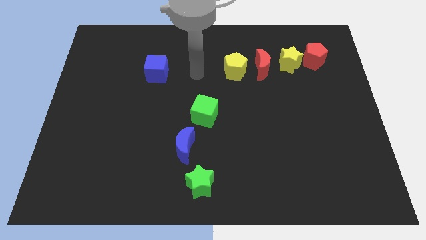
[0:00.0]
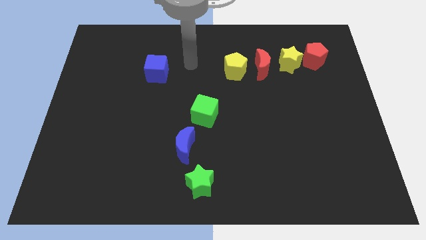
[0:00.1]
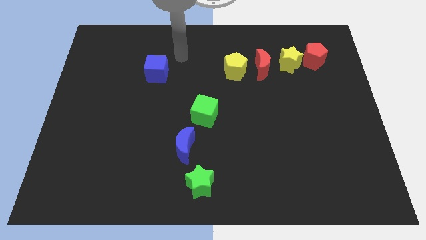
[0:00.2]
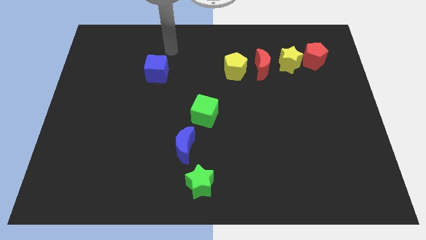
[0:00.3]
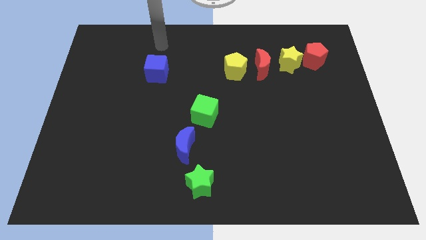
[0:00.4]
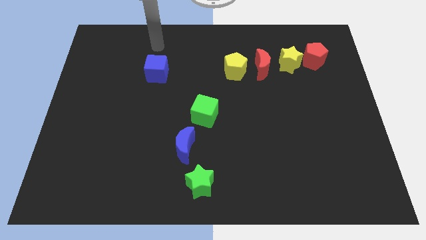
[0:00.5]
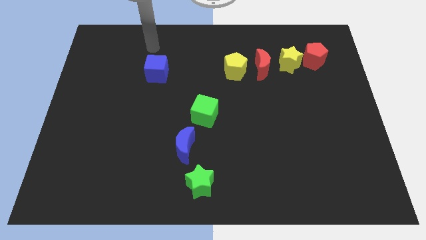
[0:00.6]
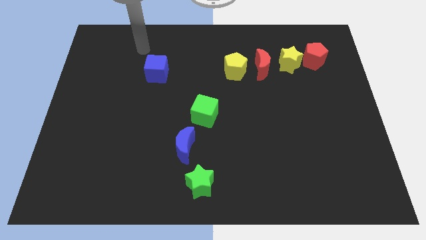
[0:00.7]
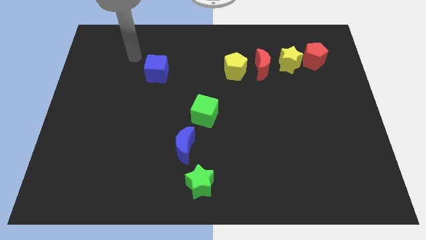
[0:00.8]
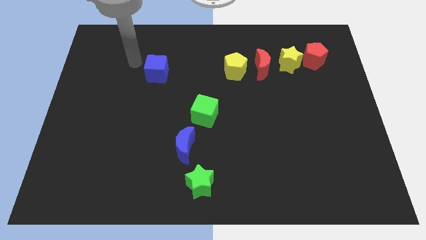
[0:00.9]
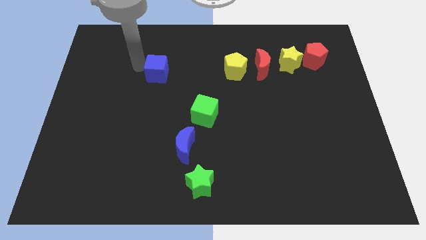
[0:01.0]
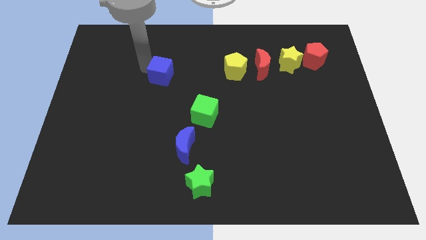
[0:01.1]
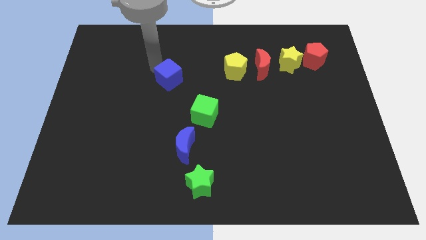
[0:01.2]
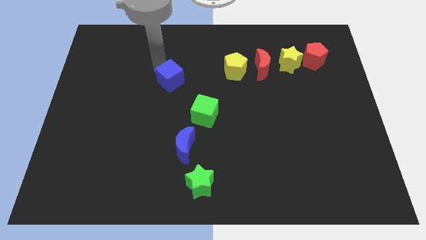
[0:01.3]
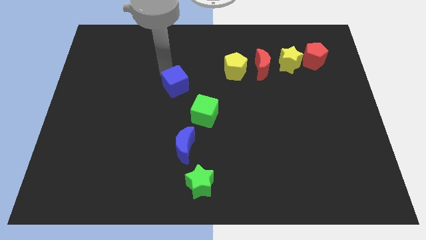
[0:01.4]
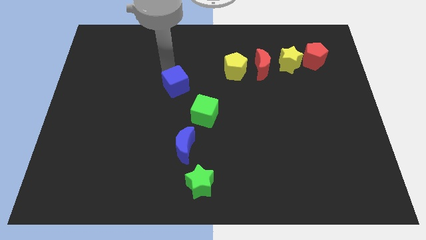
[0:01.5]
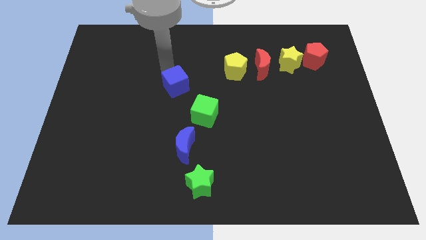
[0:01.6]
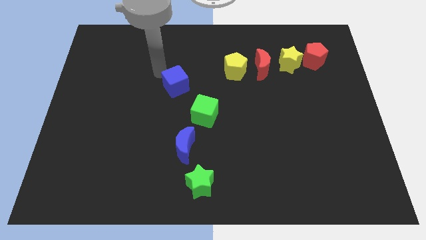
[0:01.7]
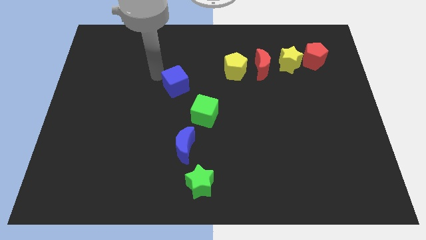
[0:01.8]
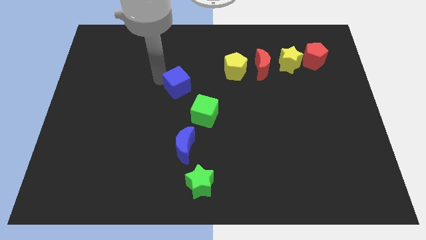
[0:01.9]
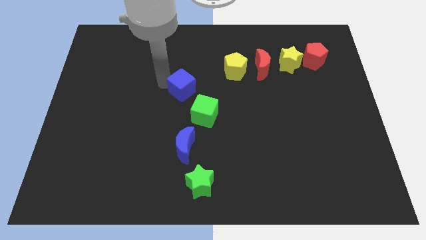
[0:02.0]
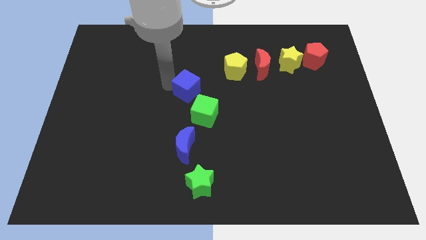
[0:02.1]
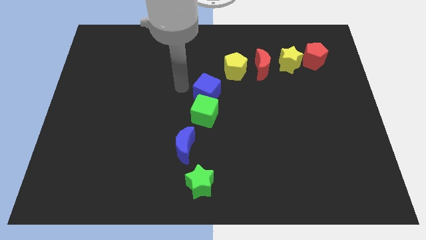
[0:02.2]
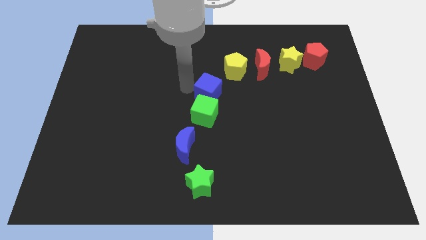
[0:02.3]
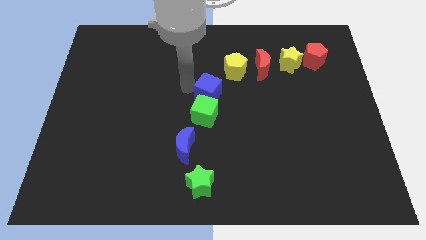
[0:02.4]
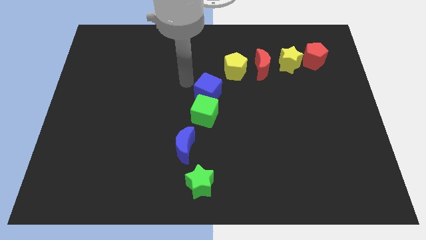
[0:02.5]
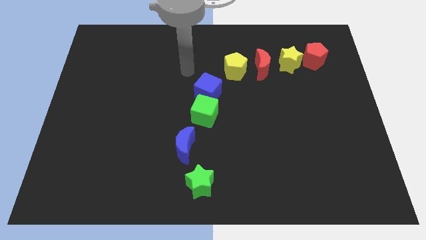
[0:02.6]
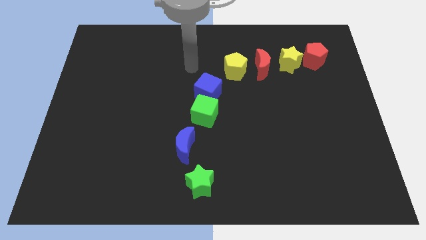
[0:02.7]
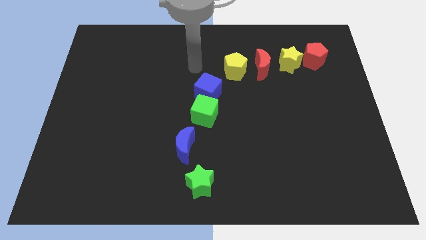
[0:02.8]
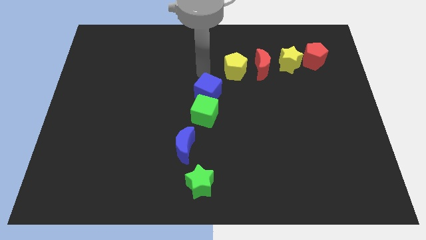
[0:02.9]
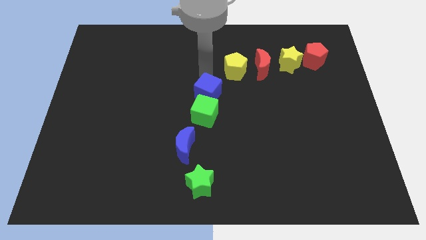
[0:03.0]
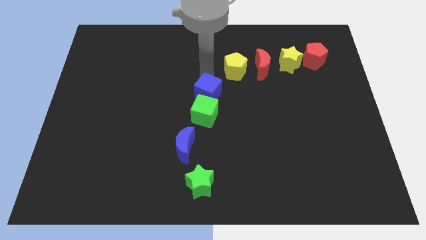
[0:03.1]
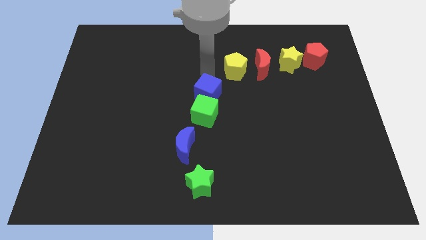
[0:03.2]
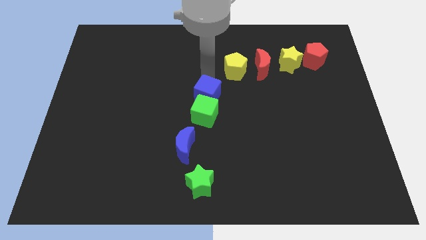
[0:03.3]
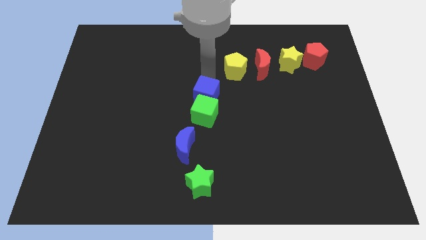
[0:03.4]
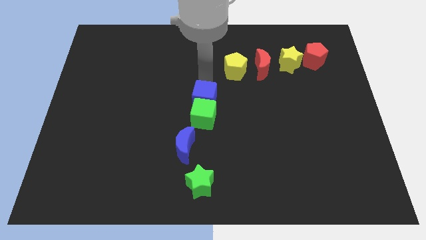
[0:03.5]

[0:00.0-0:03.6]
move the blue cube to the top of the green cube

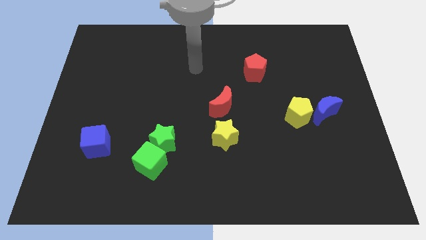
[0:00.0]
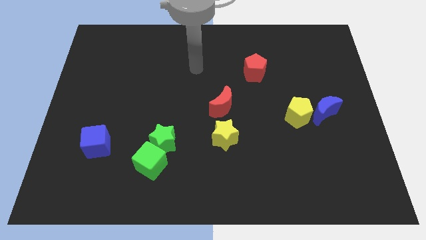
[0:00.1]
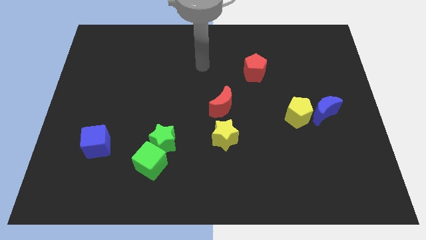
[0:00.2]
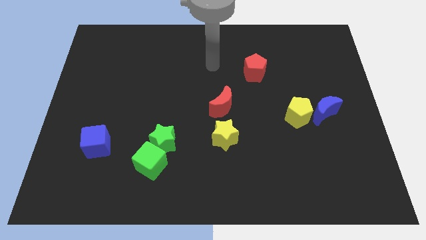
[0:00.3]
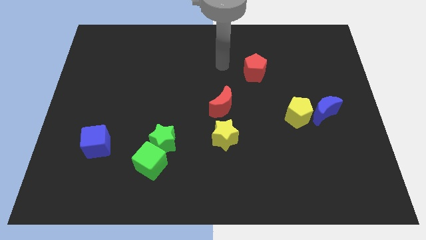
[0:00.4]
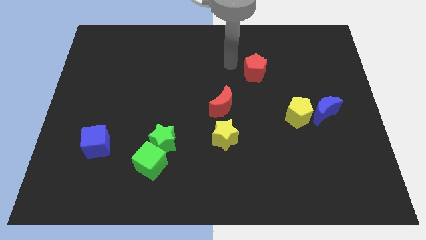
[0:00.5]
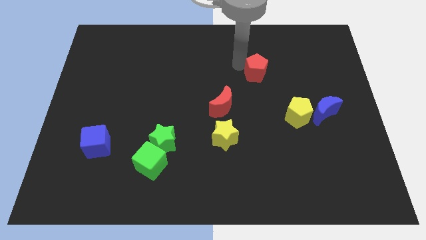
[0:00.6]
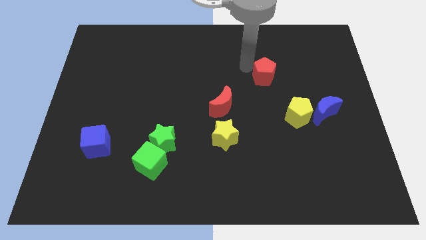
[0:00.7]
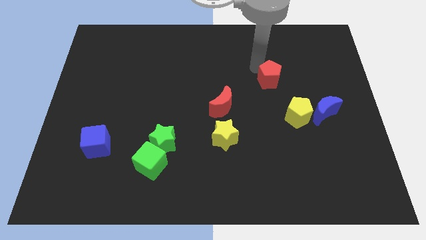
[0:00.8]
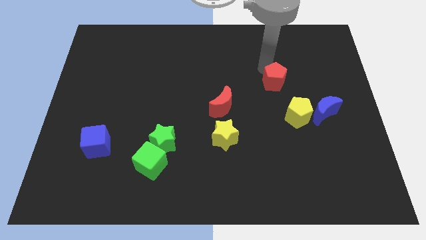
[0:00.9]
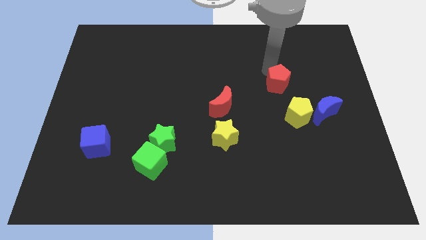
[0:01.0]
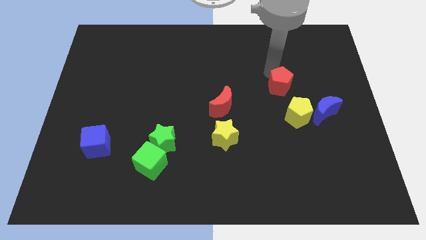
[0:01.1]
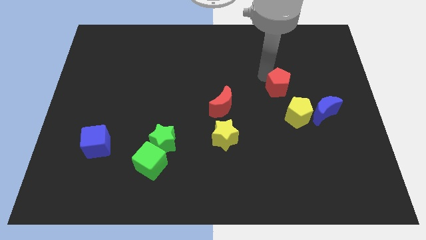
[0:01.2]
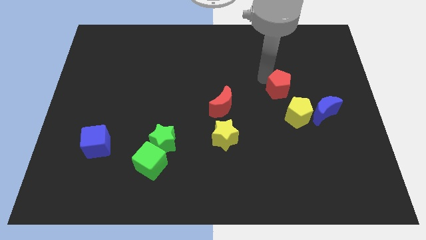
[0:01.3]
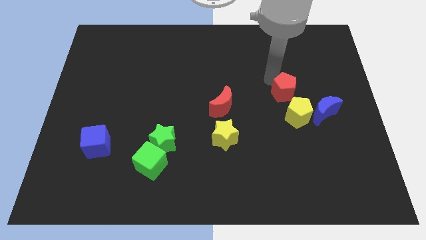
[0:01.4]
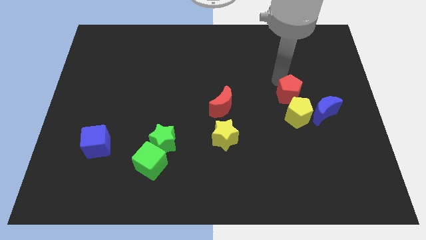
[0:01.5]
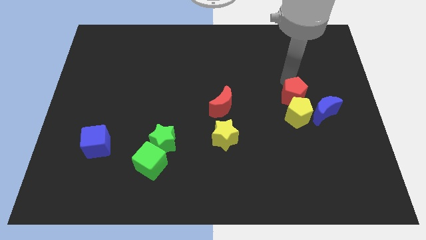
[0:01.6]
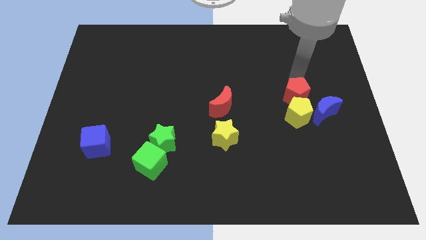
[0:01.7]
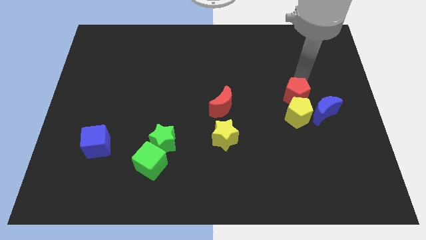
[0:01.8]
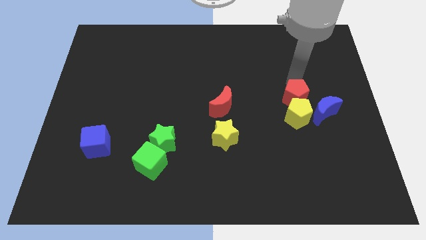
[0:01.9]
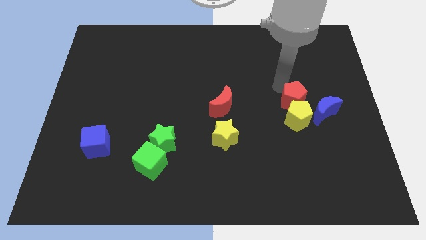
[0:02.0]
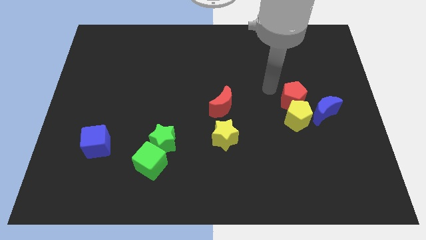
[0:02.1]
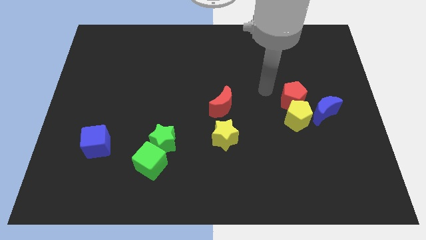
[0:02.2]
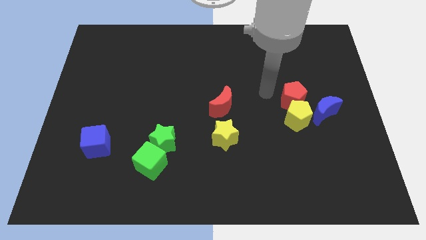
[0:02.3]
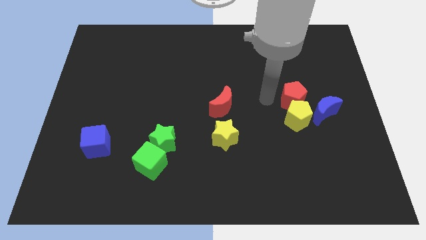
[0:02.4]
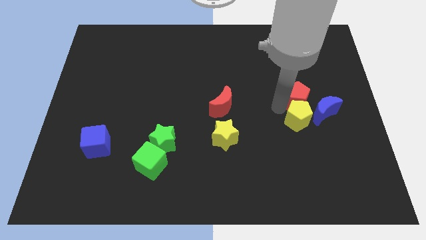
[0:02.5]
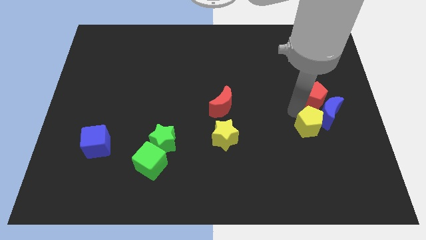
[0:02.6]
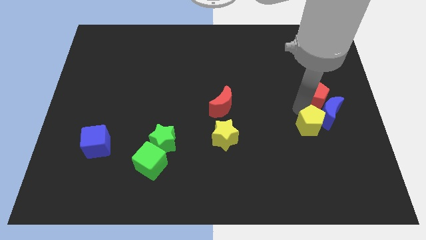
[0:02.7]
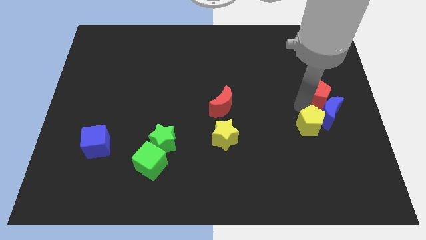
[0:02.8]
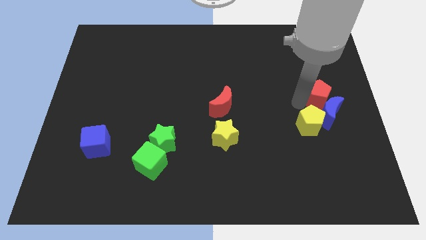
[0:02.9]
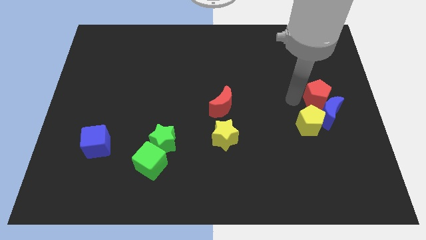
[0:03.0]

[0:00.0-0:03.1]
push the red pentagon and the yellow pentagon to the left of the blue crescent

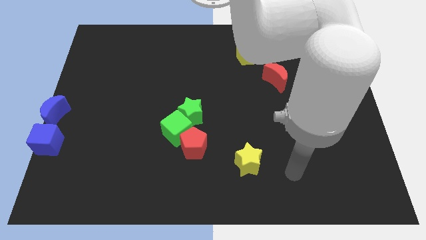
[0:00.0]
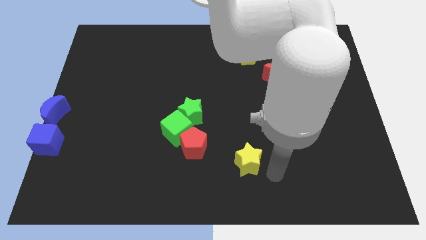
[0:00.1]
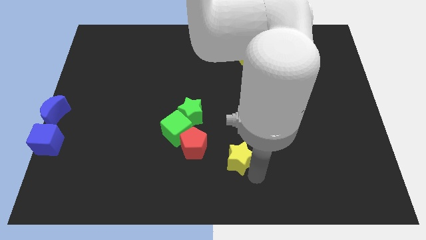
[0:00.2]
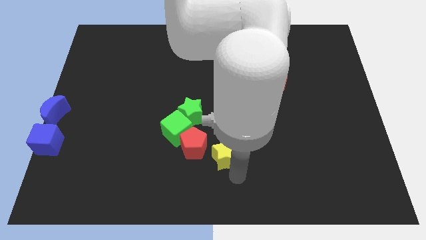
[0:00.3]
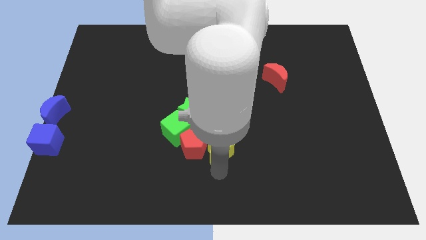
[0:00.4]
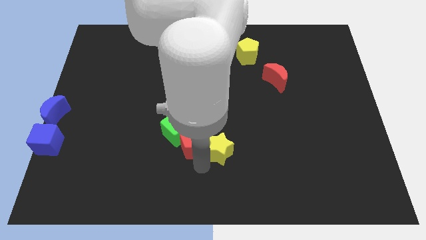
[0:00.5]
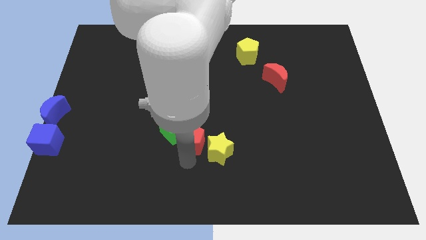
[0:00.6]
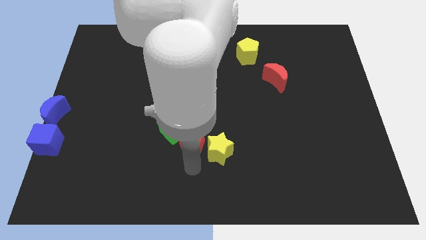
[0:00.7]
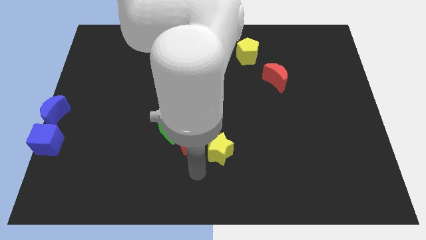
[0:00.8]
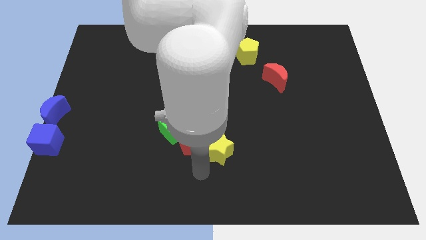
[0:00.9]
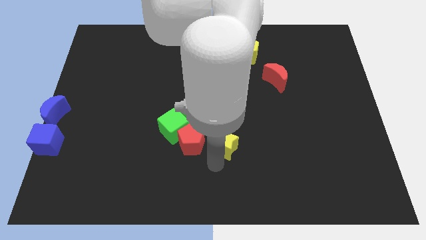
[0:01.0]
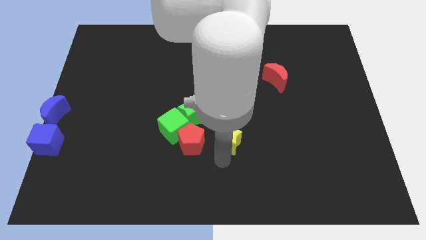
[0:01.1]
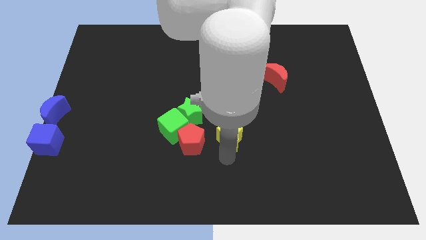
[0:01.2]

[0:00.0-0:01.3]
push the yellow star to the right side of the red pentagon

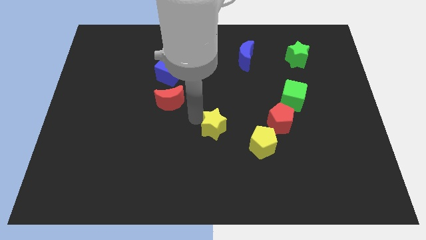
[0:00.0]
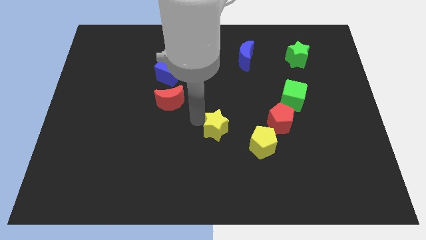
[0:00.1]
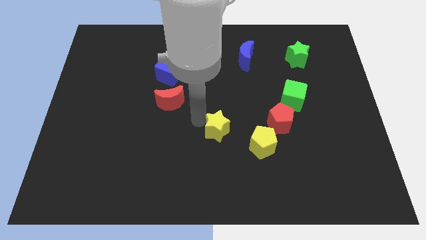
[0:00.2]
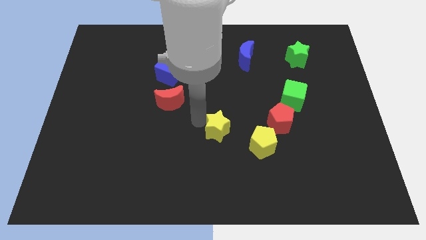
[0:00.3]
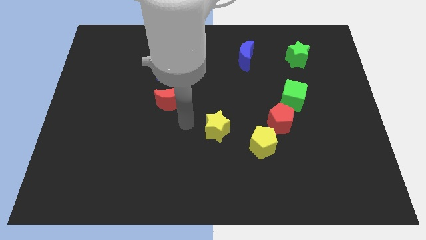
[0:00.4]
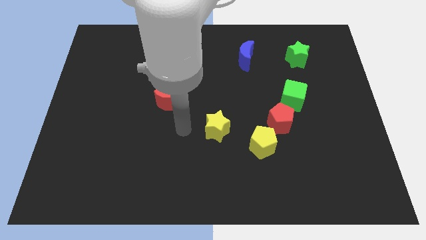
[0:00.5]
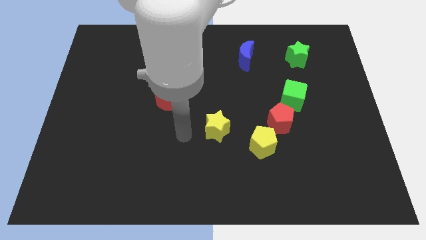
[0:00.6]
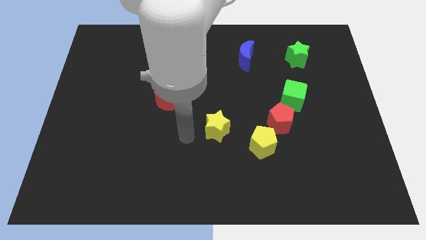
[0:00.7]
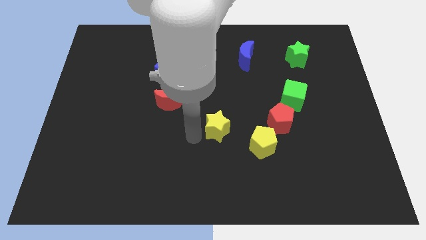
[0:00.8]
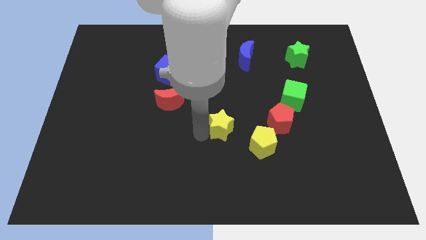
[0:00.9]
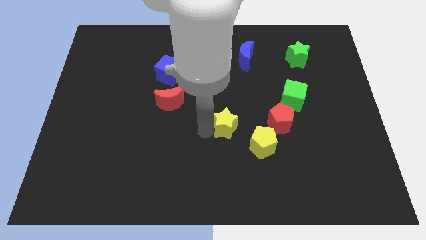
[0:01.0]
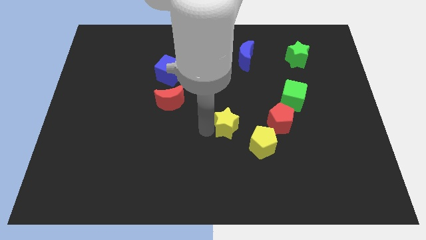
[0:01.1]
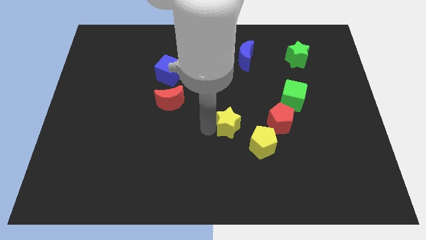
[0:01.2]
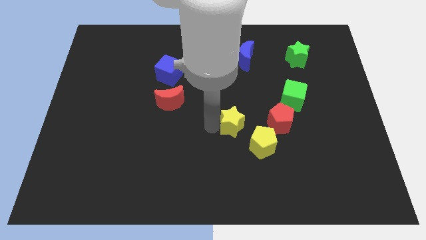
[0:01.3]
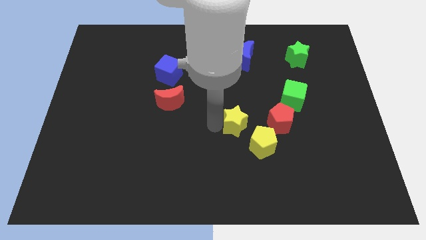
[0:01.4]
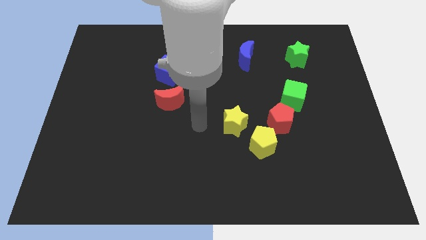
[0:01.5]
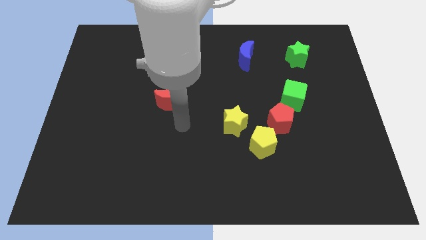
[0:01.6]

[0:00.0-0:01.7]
move the yellow star to the top left of the yellow pentagon
